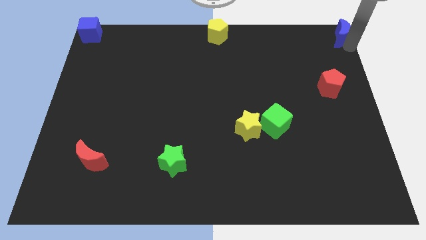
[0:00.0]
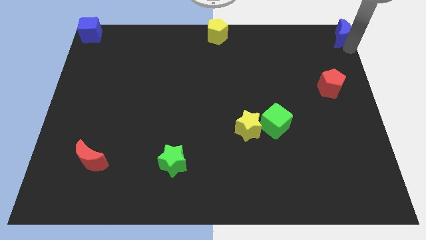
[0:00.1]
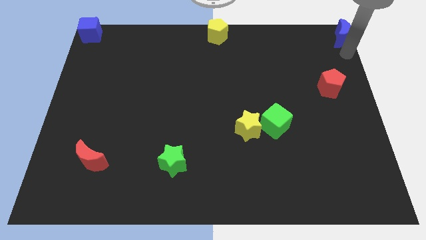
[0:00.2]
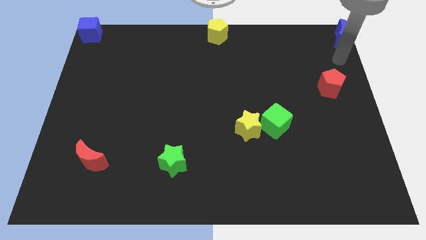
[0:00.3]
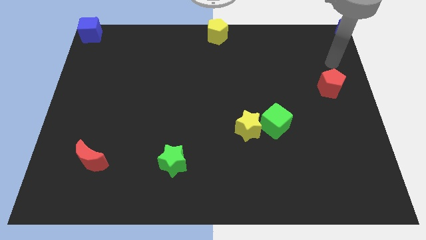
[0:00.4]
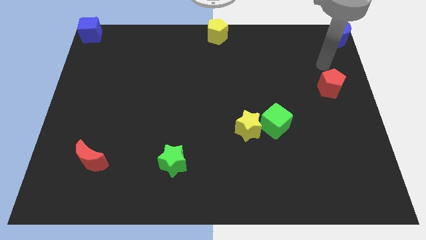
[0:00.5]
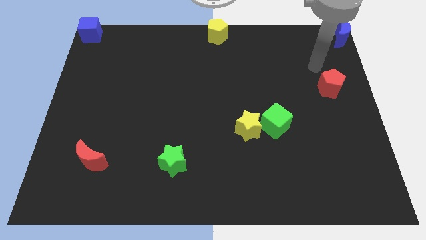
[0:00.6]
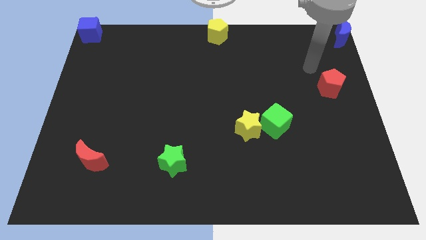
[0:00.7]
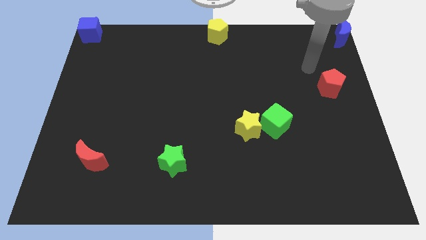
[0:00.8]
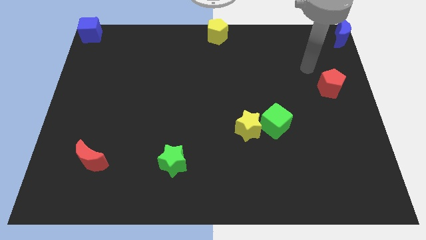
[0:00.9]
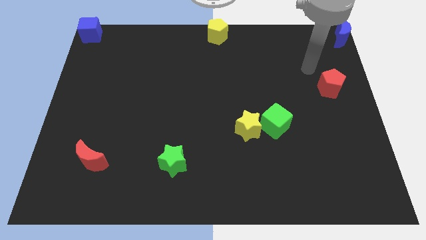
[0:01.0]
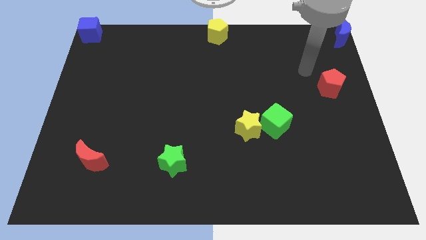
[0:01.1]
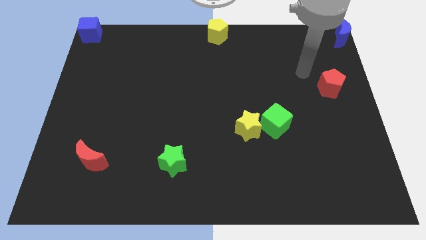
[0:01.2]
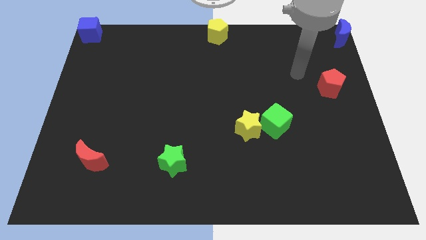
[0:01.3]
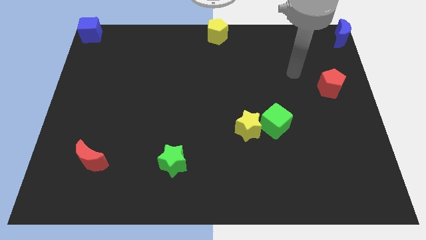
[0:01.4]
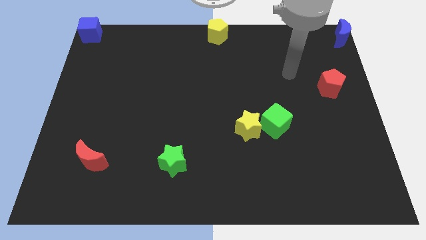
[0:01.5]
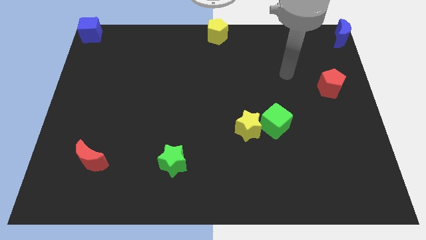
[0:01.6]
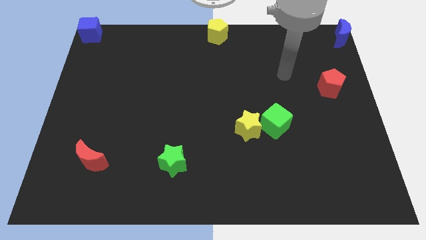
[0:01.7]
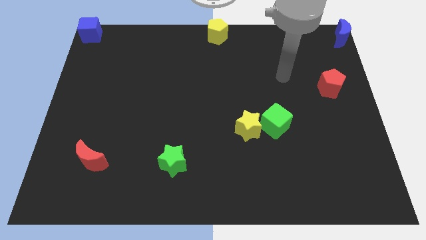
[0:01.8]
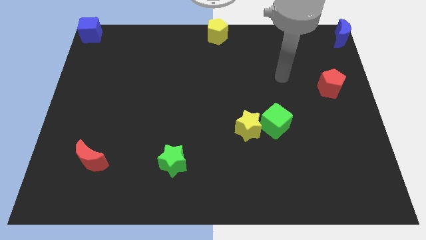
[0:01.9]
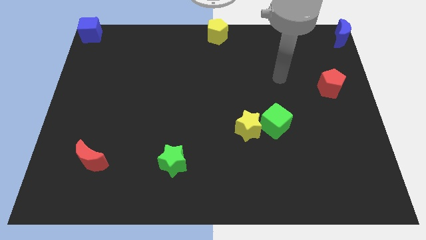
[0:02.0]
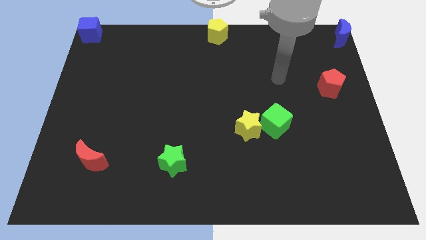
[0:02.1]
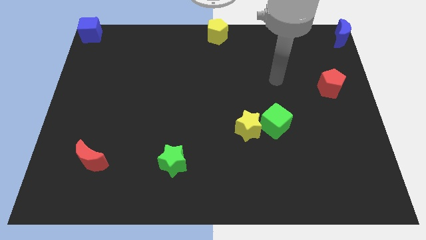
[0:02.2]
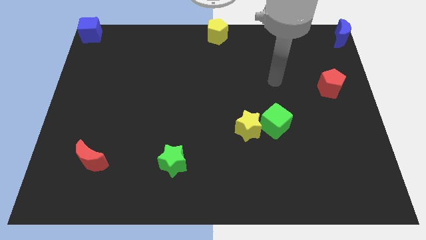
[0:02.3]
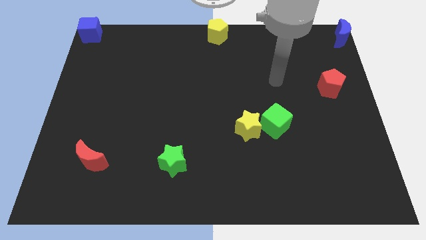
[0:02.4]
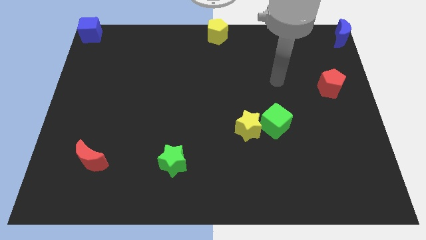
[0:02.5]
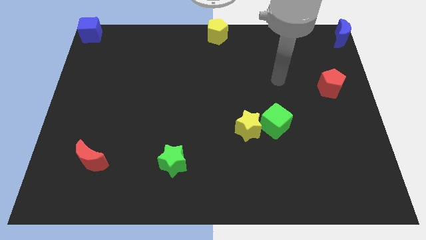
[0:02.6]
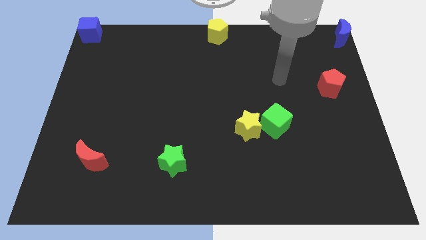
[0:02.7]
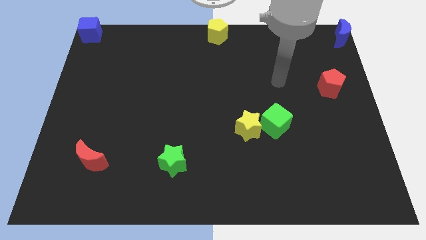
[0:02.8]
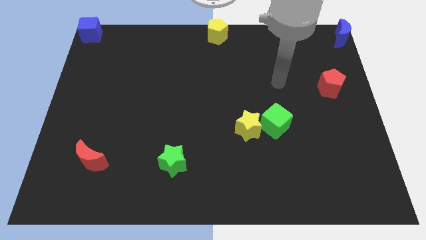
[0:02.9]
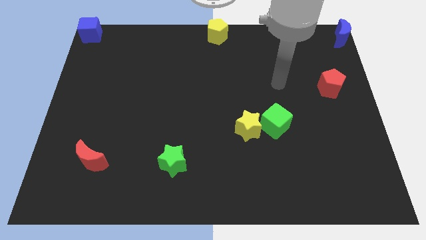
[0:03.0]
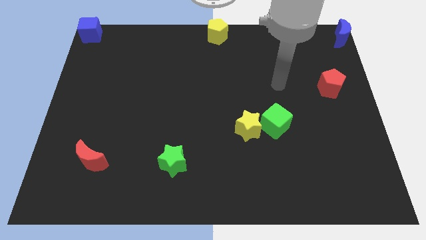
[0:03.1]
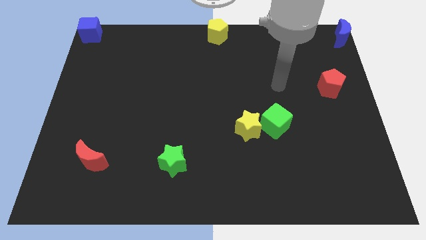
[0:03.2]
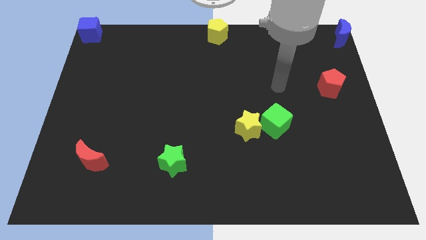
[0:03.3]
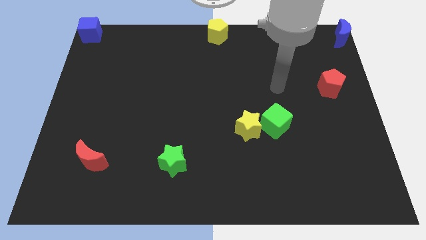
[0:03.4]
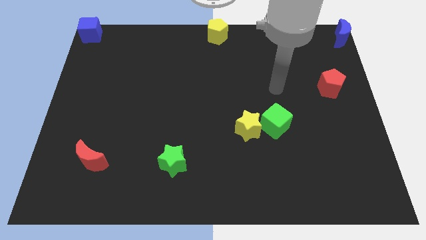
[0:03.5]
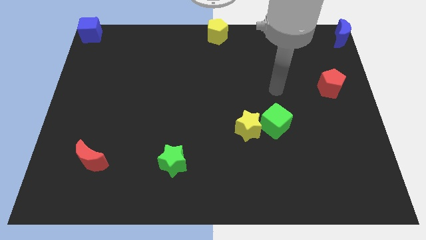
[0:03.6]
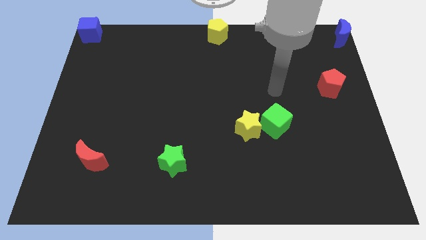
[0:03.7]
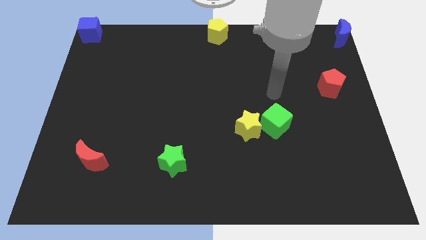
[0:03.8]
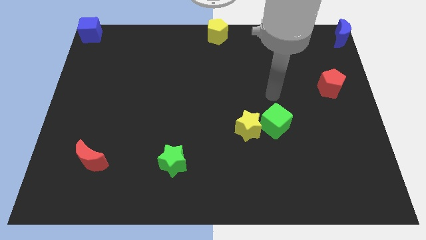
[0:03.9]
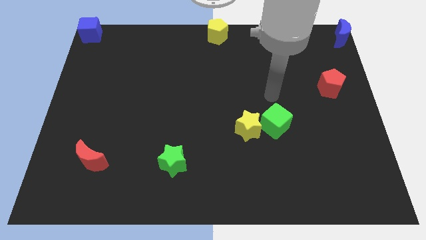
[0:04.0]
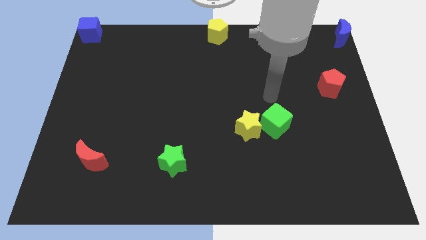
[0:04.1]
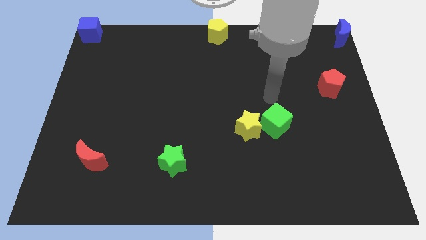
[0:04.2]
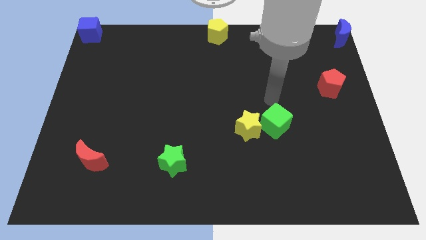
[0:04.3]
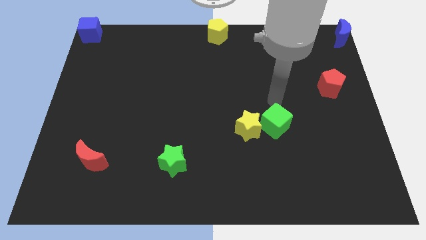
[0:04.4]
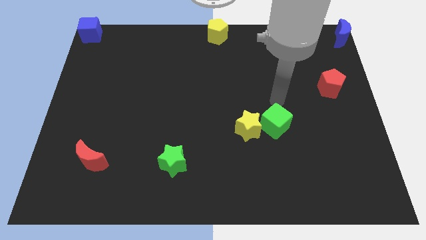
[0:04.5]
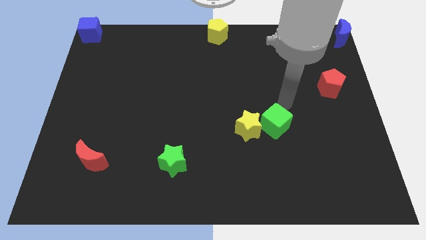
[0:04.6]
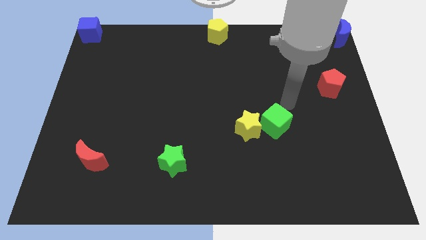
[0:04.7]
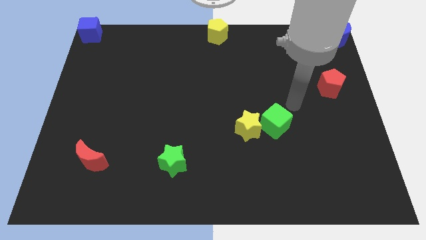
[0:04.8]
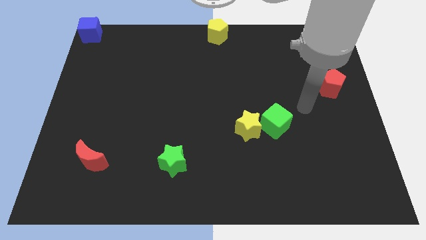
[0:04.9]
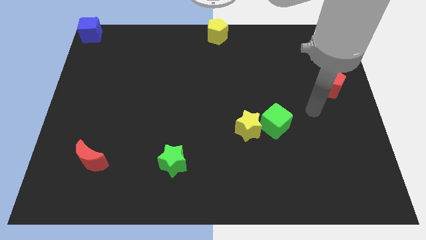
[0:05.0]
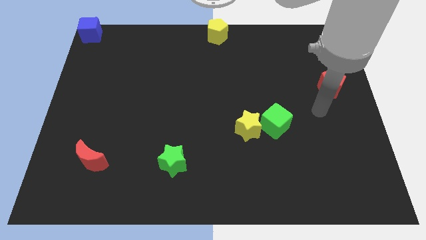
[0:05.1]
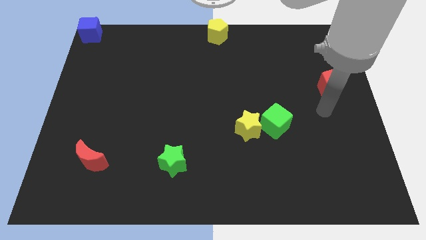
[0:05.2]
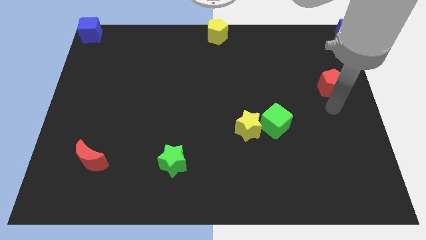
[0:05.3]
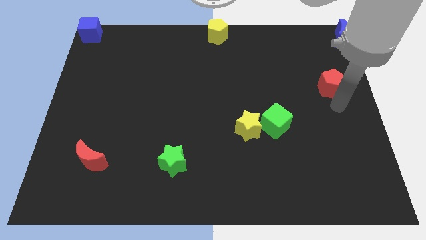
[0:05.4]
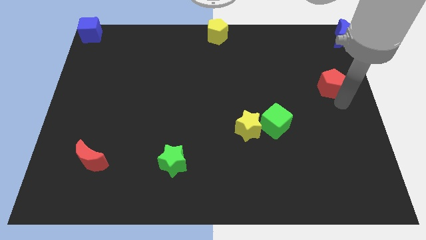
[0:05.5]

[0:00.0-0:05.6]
move your arm towards right to the red pentagon

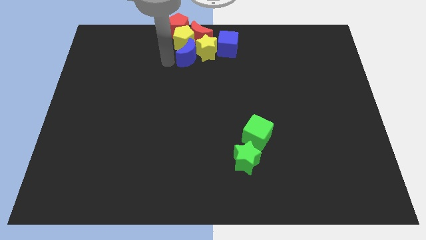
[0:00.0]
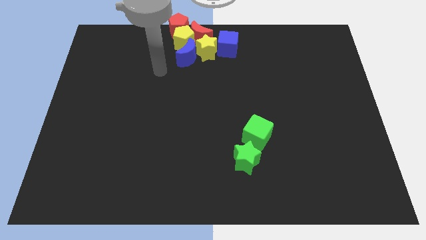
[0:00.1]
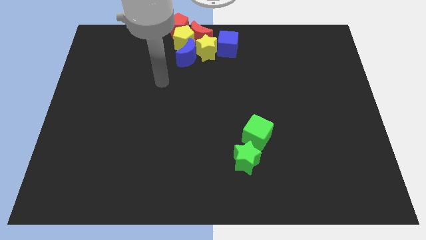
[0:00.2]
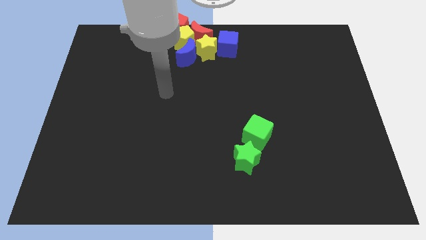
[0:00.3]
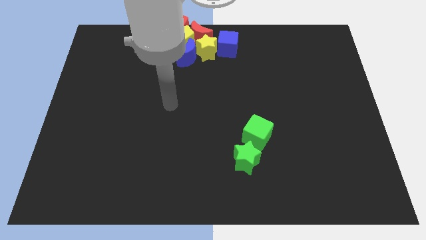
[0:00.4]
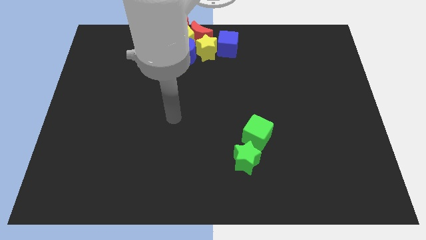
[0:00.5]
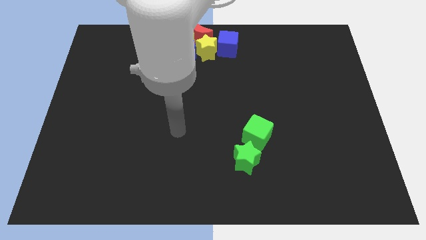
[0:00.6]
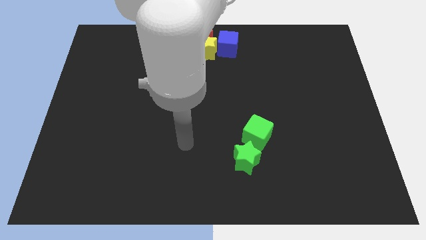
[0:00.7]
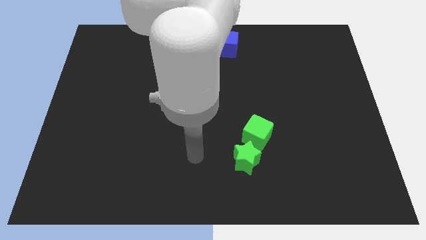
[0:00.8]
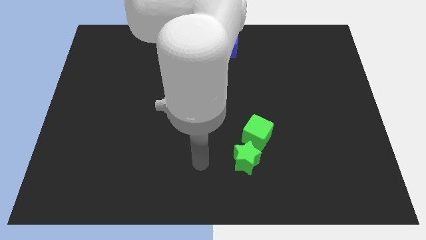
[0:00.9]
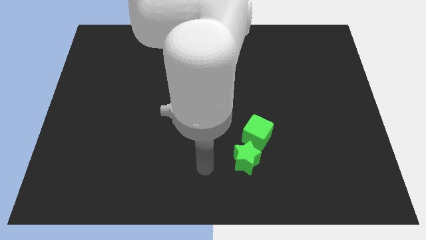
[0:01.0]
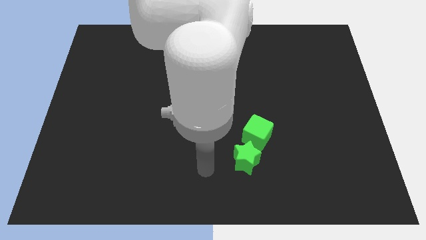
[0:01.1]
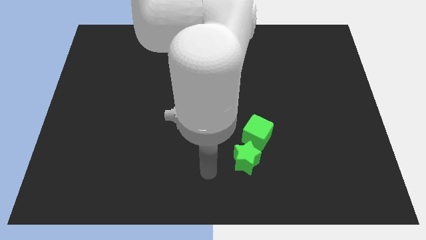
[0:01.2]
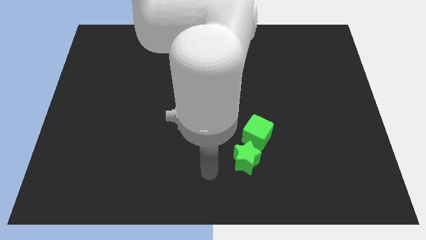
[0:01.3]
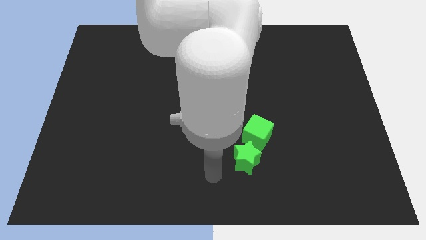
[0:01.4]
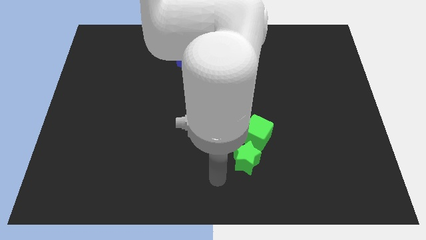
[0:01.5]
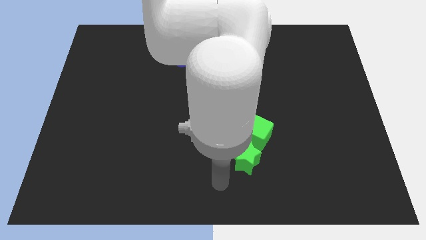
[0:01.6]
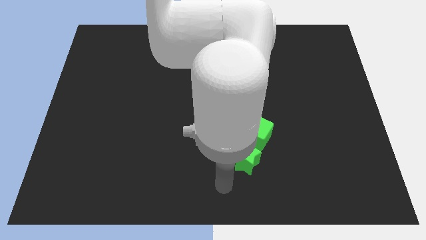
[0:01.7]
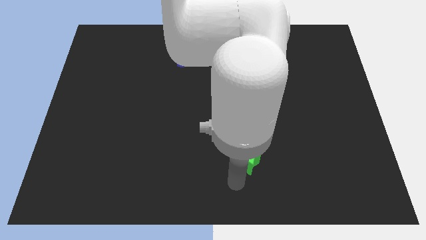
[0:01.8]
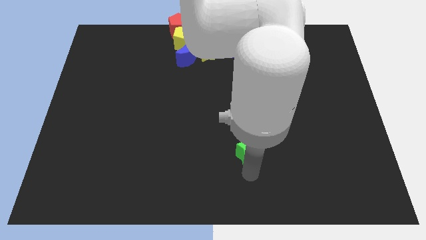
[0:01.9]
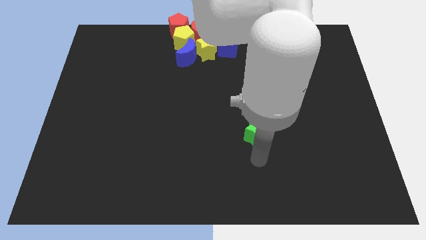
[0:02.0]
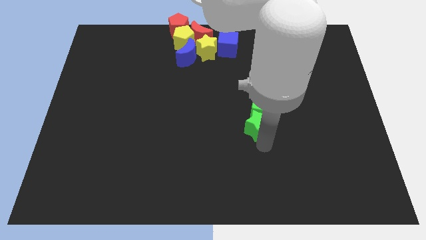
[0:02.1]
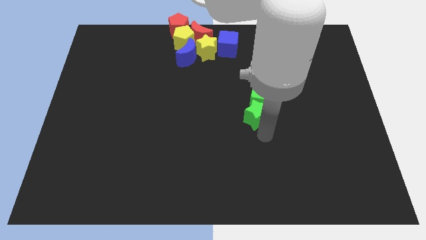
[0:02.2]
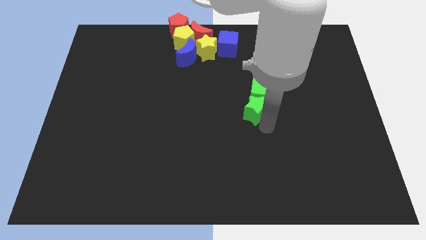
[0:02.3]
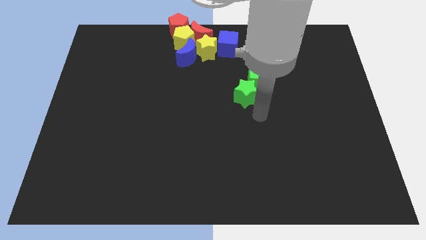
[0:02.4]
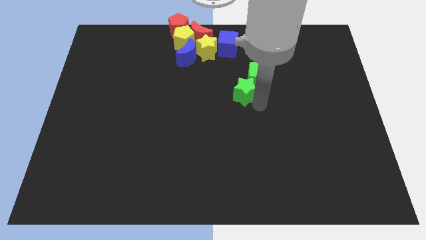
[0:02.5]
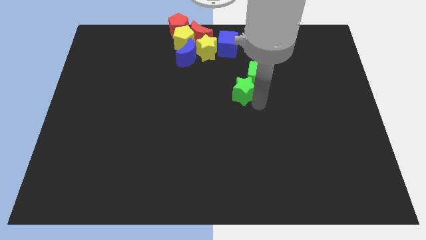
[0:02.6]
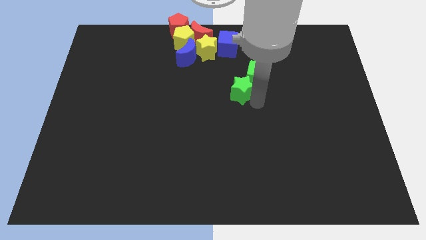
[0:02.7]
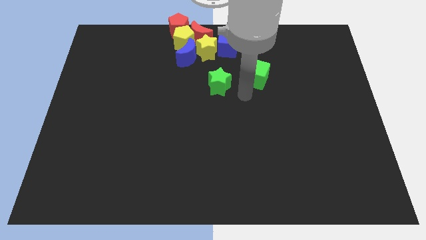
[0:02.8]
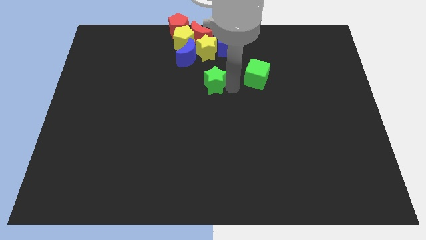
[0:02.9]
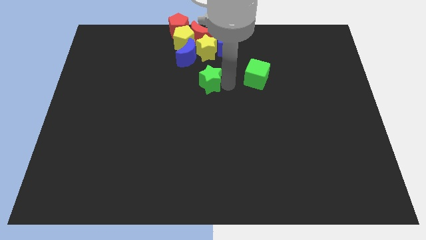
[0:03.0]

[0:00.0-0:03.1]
move the green blocks to the top center

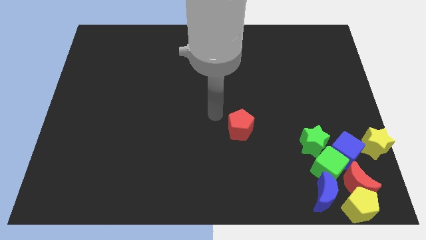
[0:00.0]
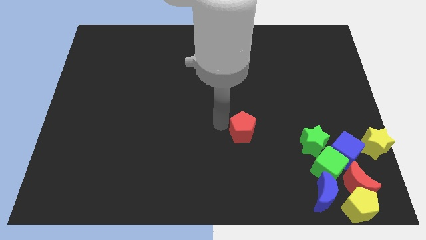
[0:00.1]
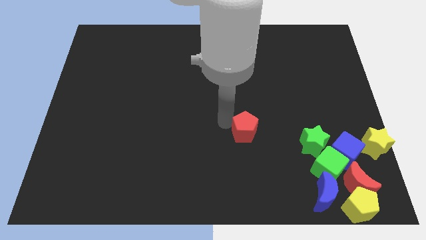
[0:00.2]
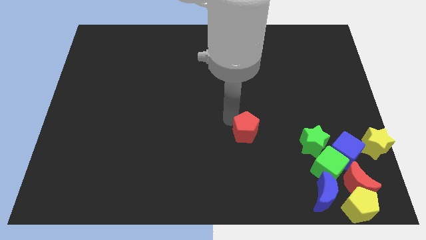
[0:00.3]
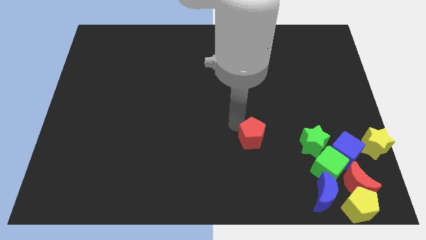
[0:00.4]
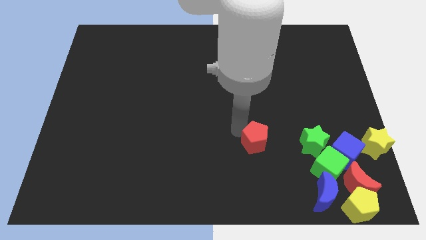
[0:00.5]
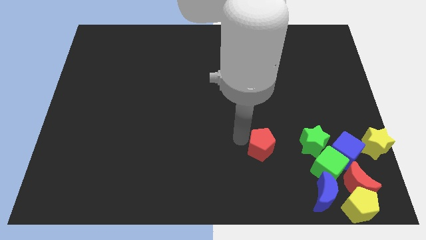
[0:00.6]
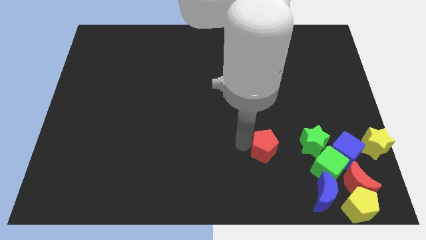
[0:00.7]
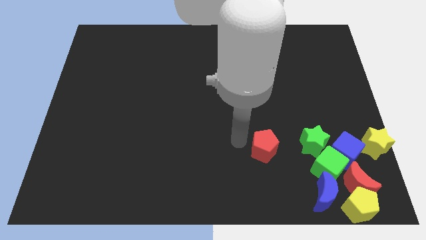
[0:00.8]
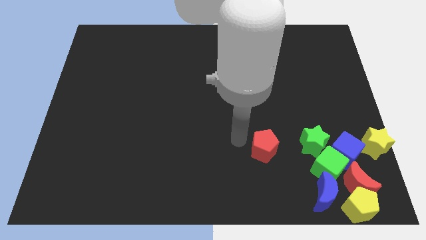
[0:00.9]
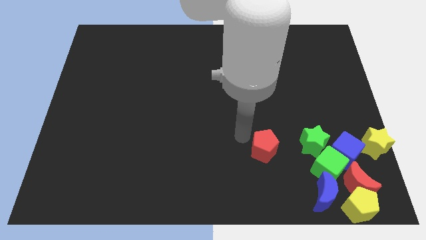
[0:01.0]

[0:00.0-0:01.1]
place the red pentagon to the left of green star
